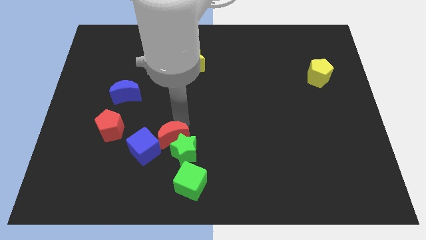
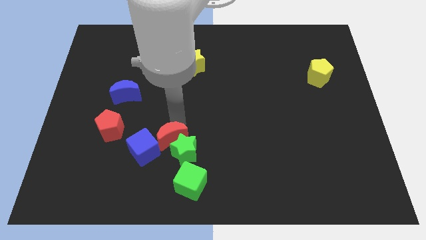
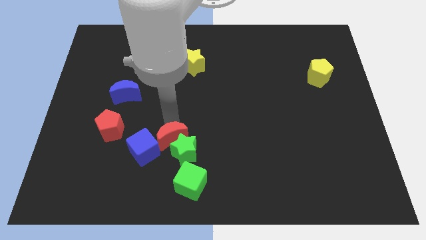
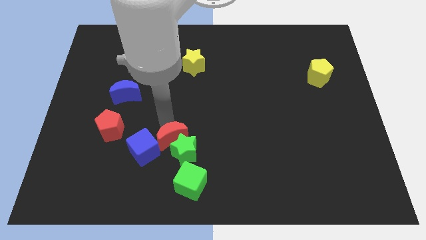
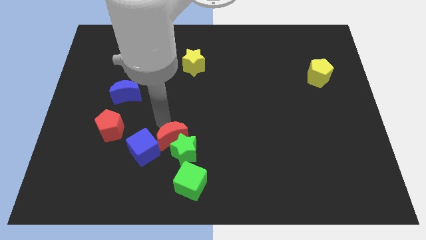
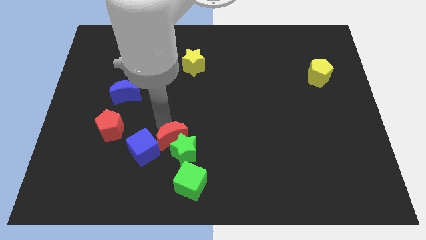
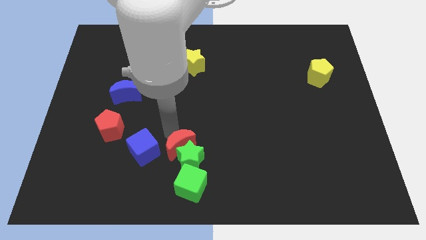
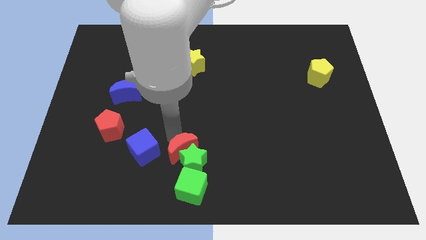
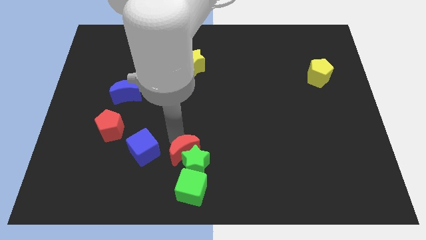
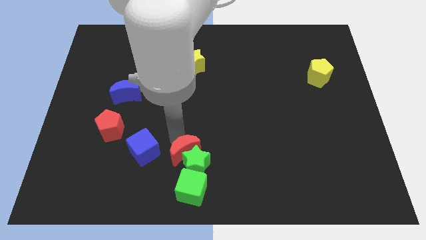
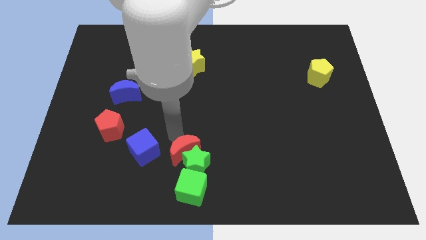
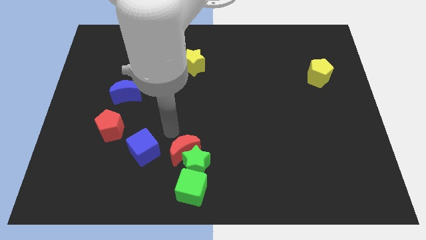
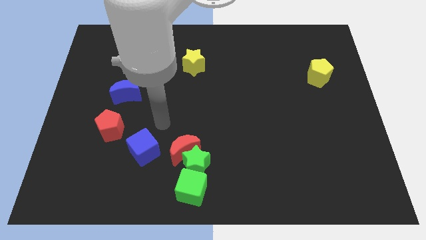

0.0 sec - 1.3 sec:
move red crescent into the green star at the bottom center

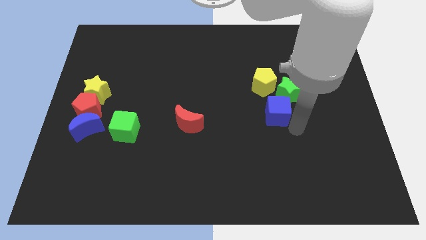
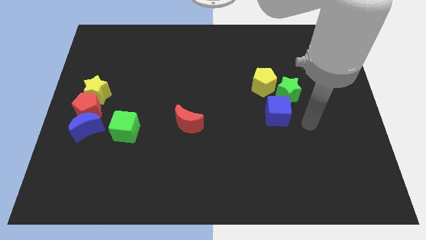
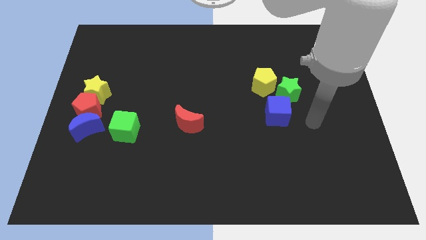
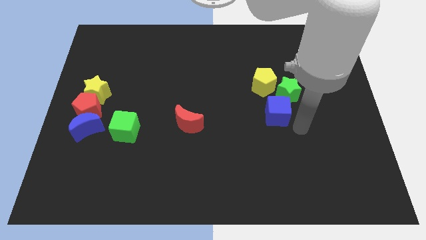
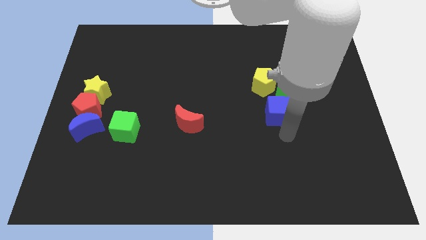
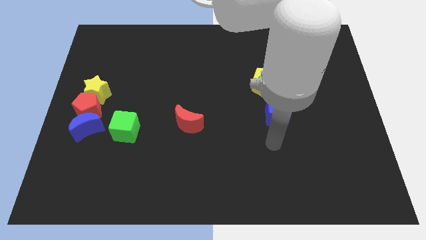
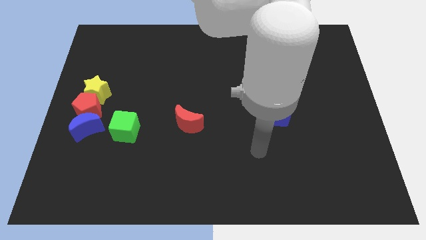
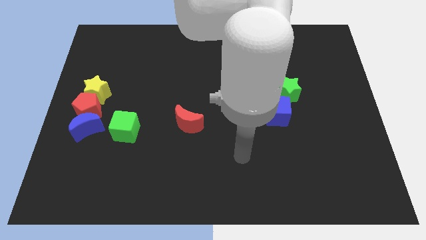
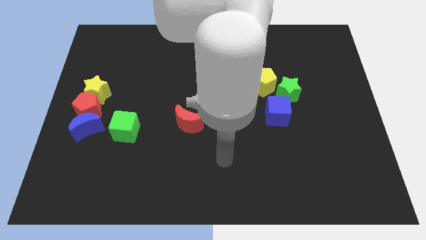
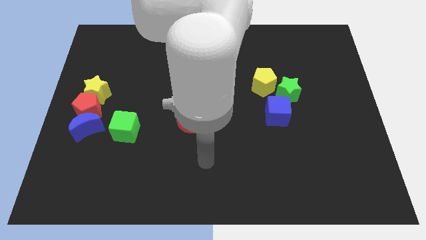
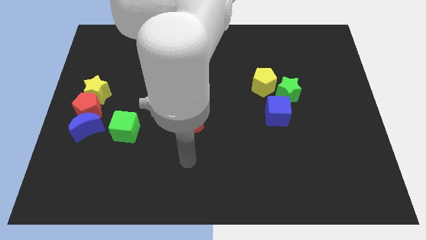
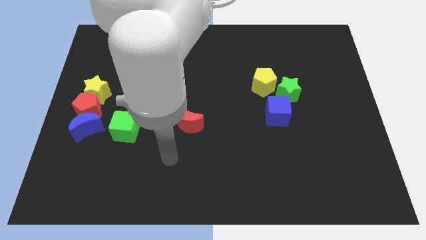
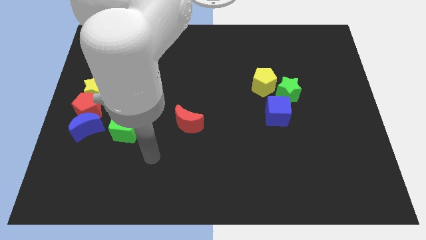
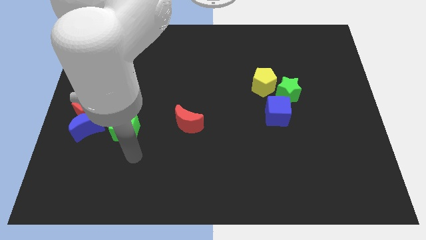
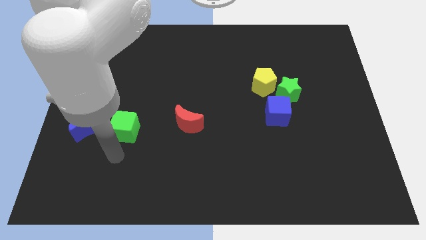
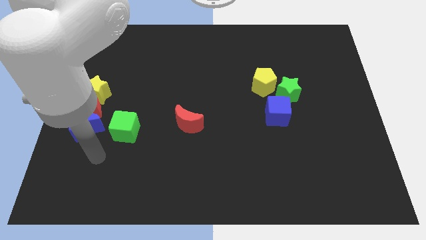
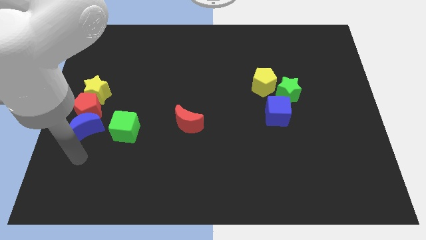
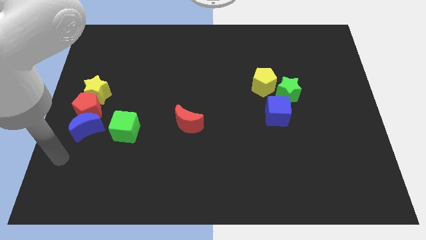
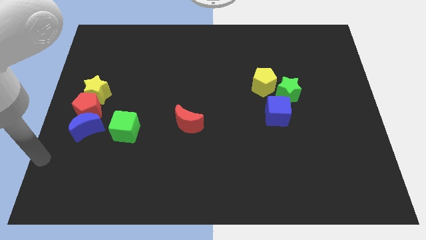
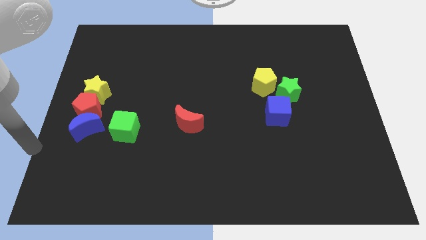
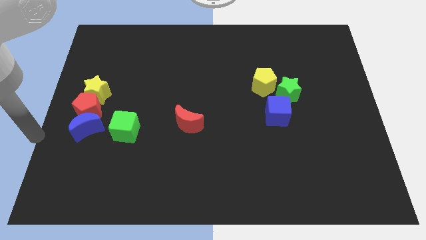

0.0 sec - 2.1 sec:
move your arm away from blue cube

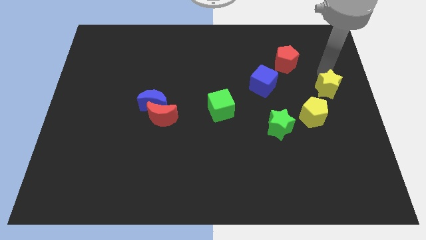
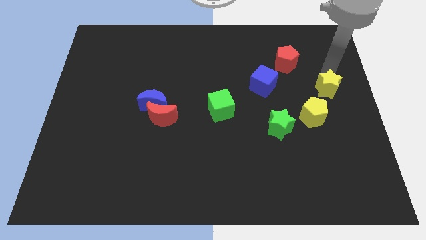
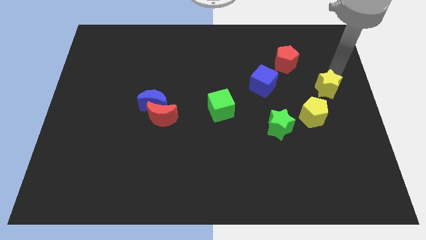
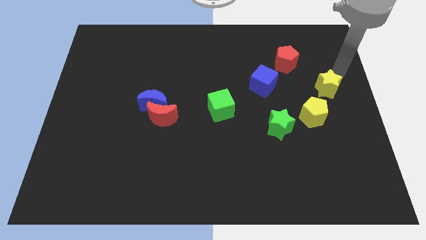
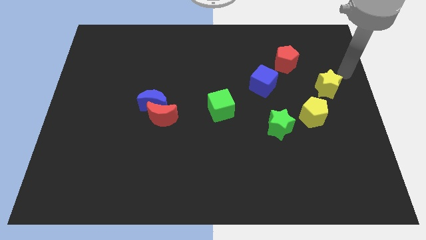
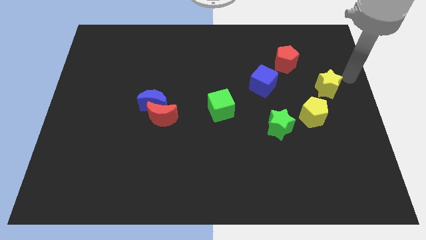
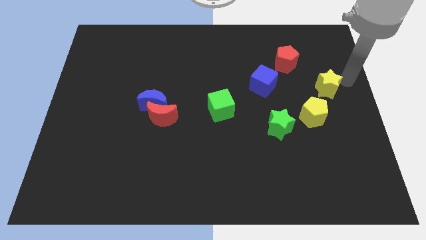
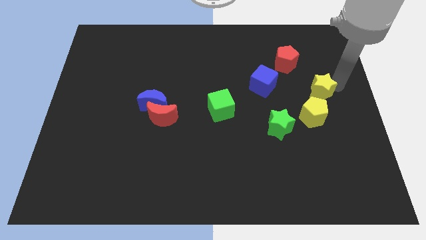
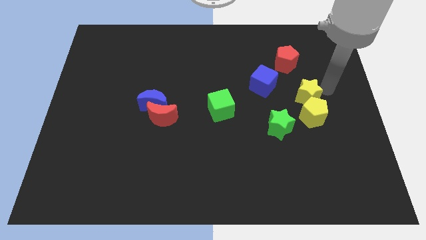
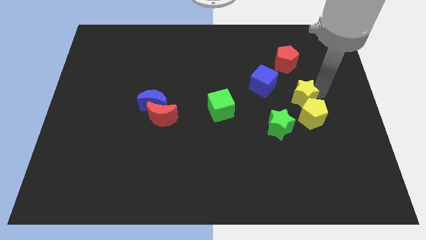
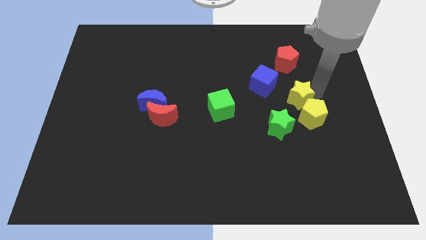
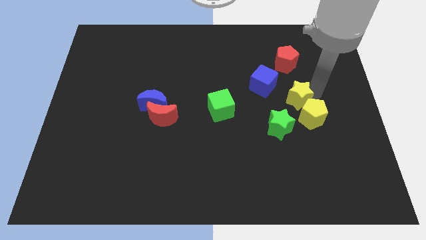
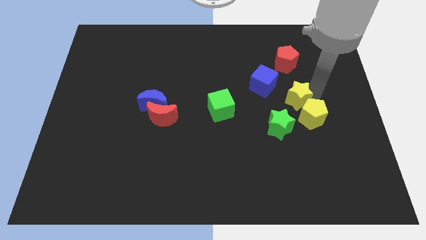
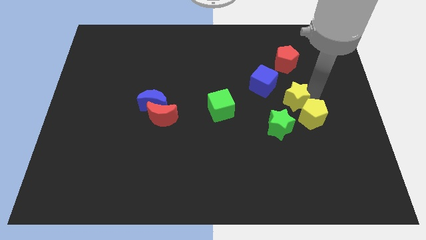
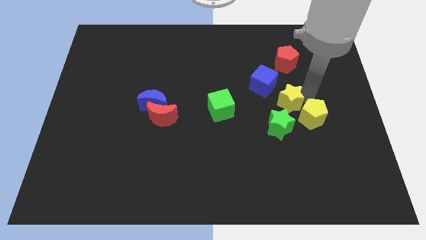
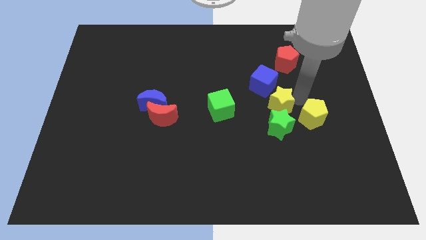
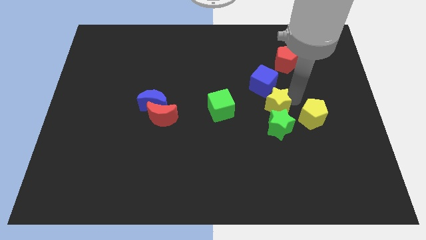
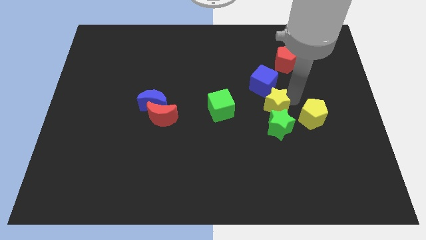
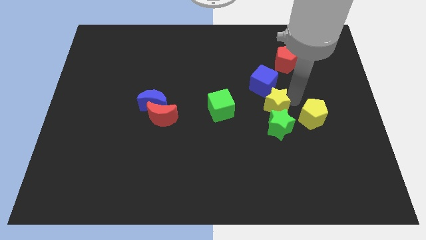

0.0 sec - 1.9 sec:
put the yellow star at the top side of the green star

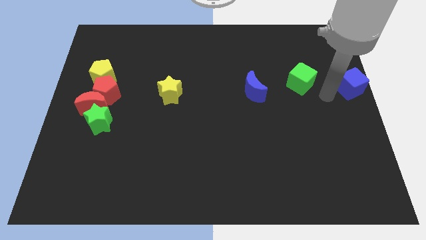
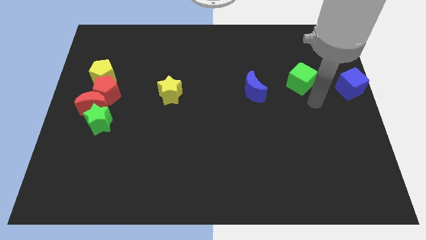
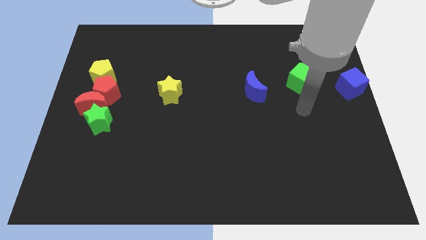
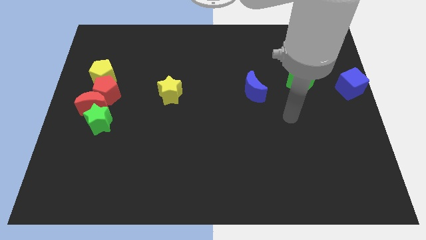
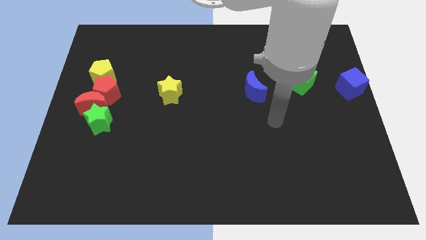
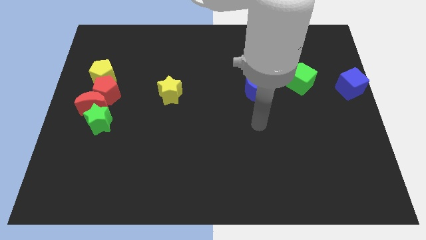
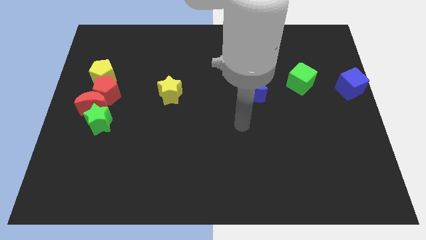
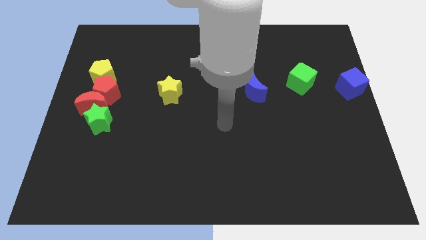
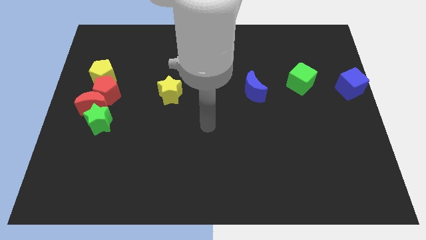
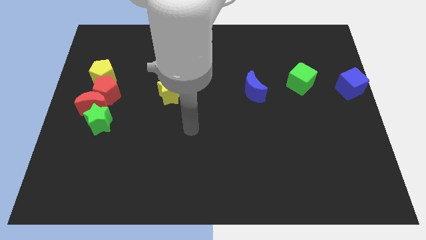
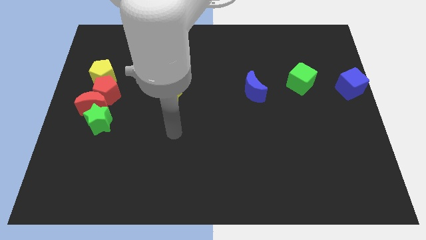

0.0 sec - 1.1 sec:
move arm to the bottom of yellow star

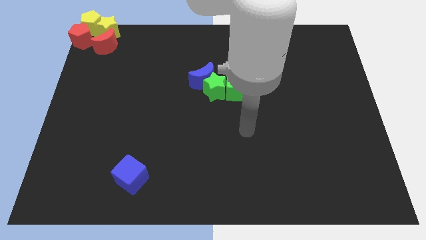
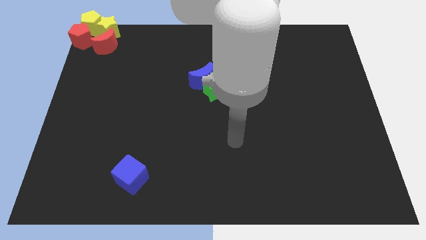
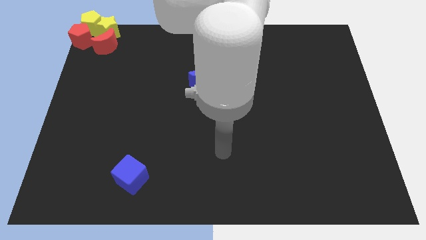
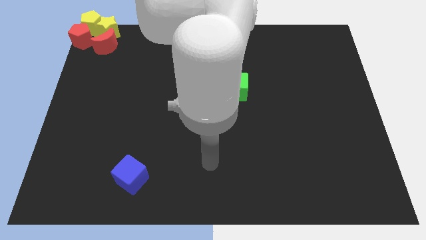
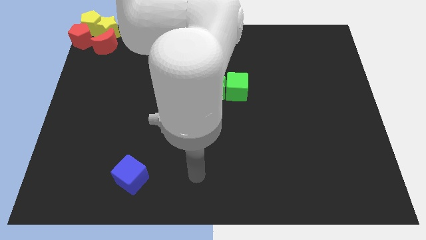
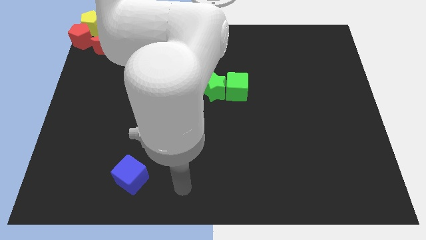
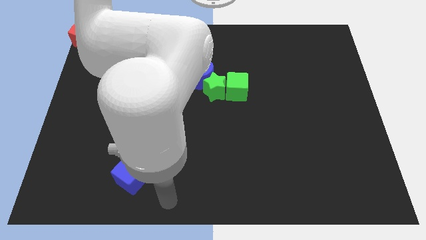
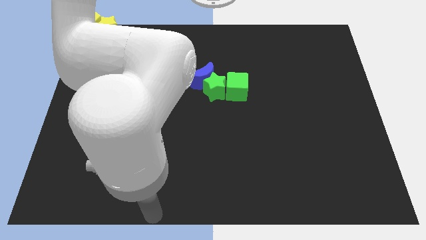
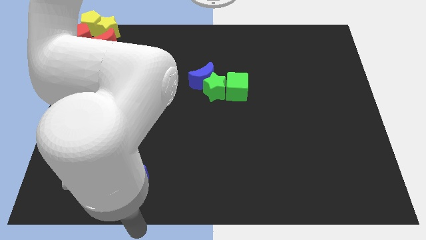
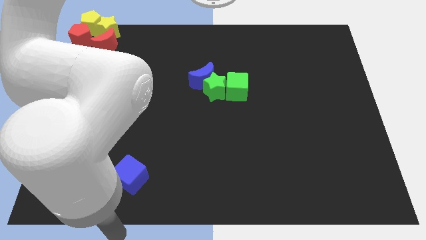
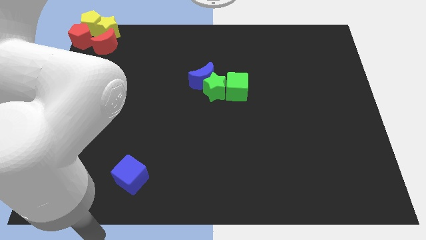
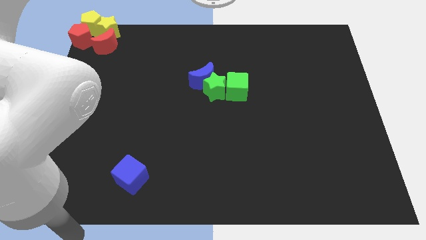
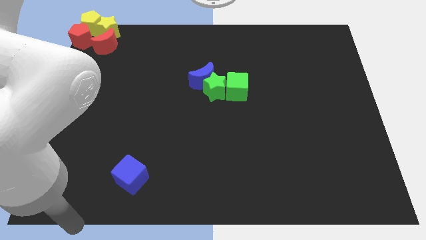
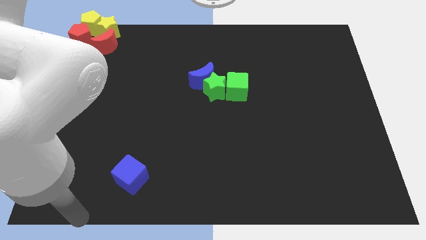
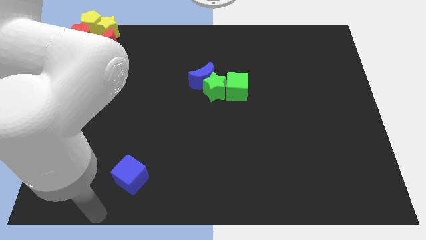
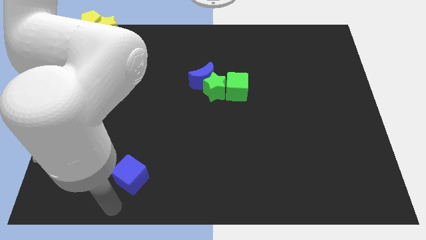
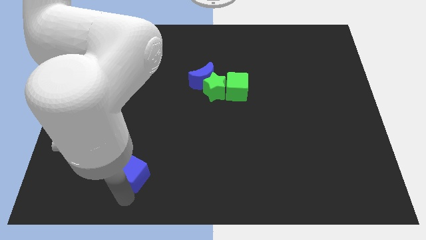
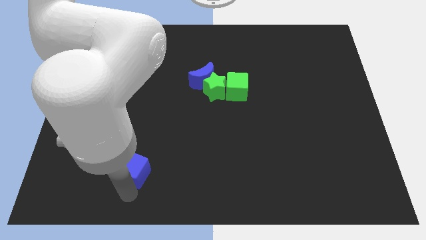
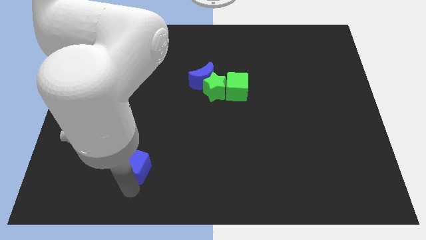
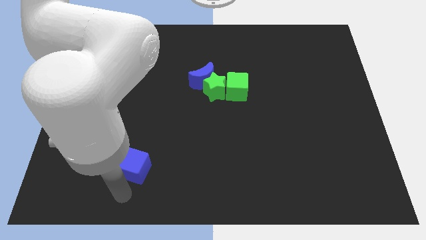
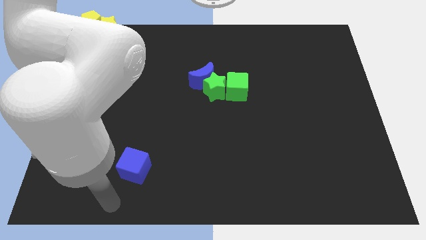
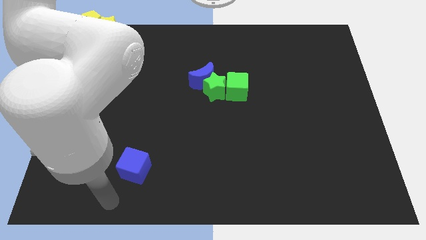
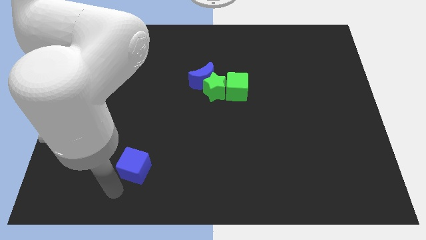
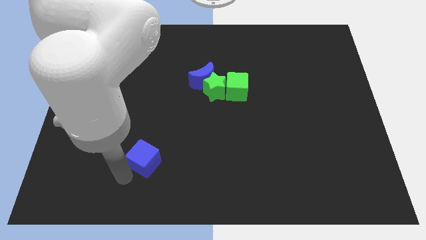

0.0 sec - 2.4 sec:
move blue cube slightly upwards

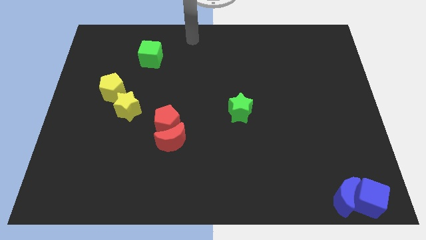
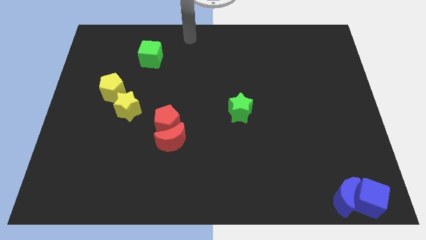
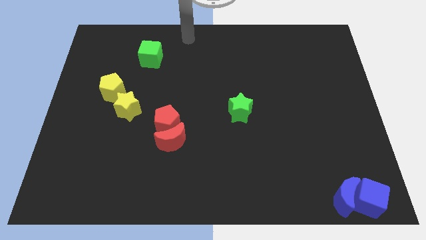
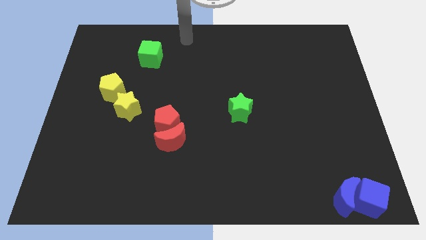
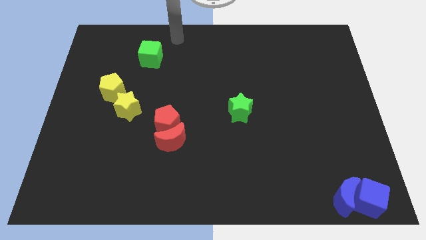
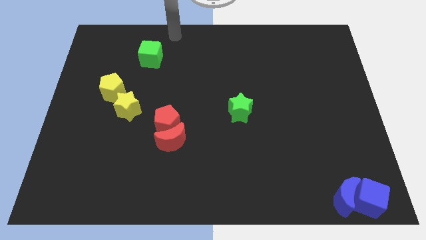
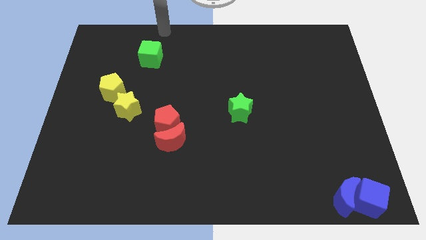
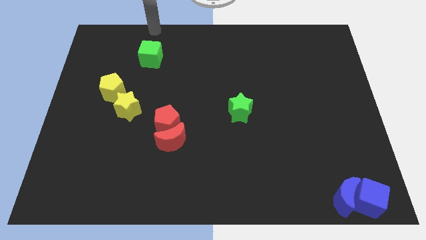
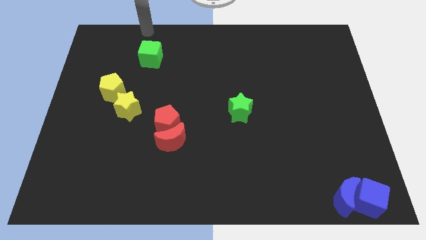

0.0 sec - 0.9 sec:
move your arm close to the green cube
